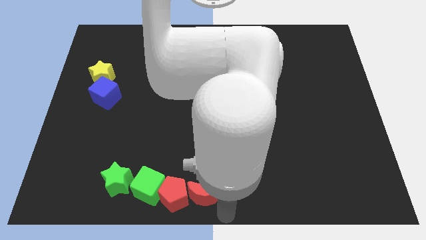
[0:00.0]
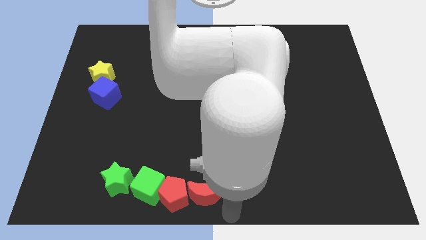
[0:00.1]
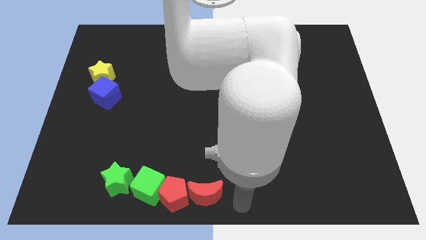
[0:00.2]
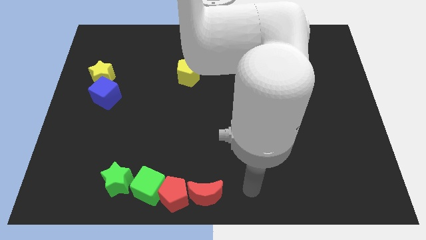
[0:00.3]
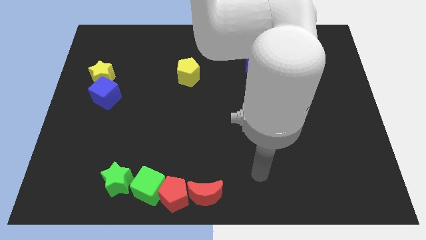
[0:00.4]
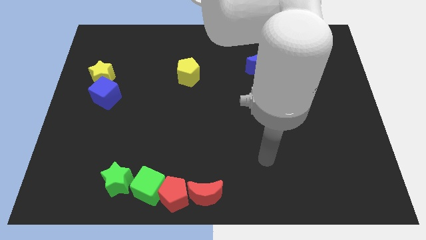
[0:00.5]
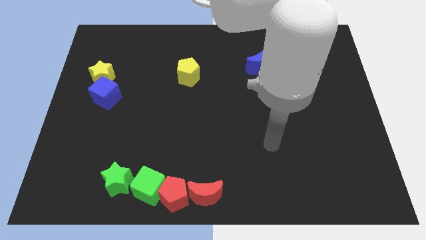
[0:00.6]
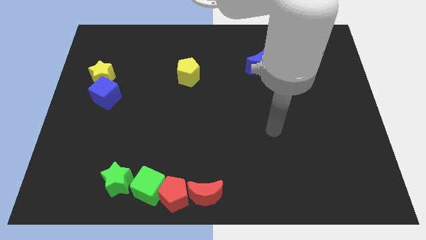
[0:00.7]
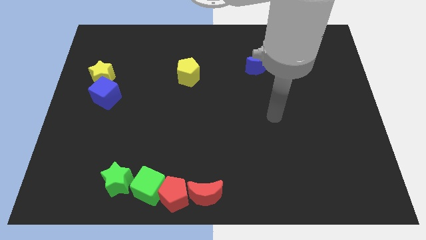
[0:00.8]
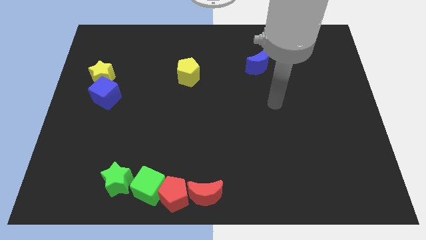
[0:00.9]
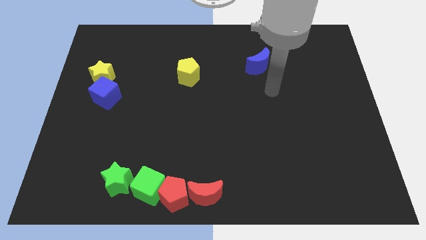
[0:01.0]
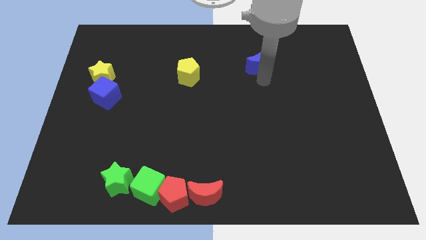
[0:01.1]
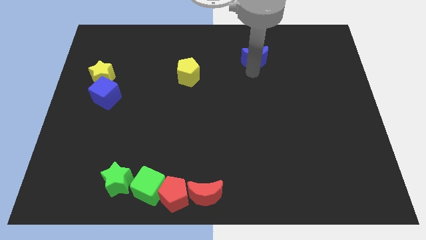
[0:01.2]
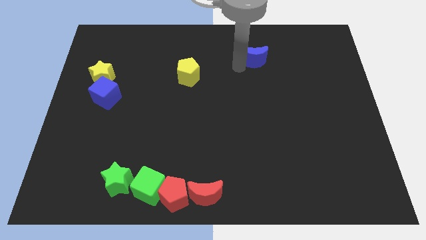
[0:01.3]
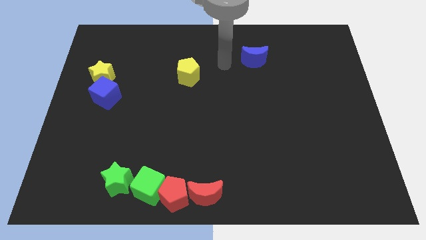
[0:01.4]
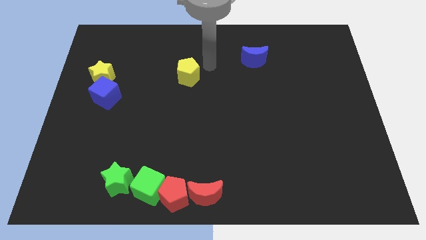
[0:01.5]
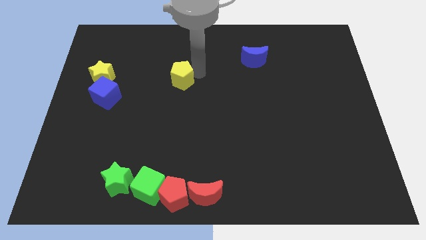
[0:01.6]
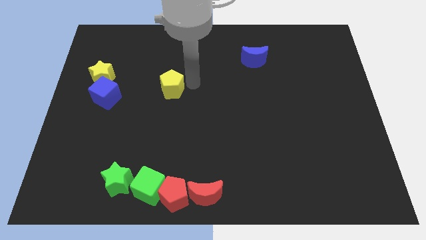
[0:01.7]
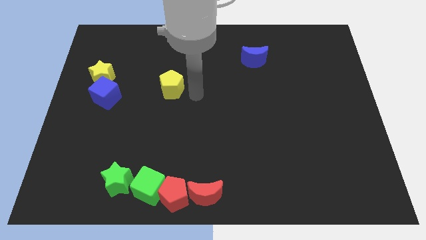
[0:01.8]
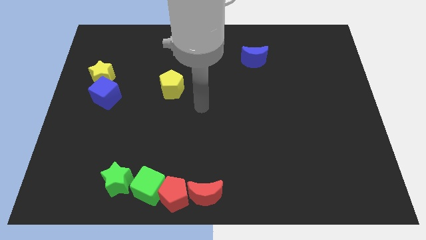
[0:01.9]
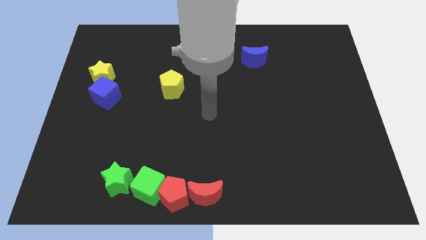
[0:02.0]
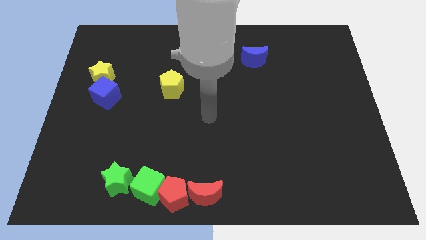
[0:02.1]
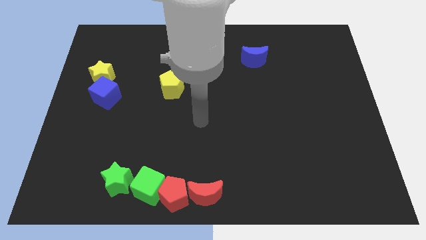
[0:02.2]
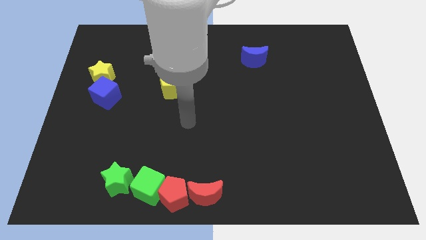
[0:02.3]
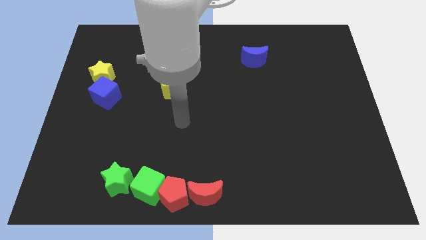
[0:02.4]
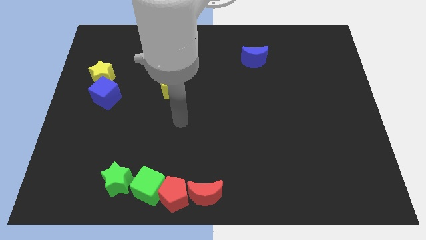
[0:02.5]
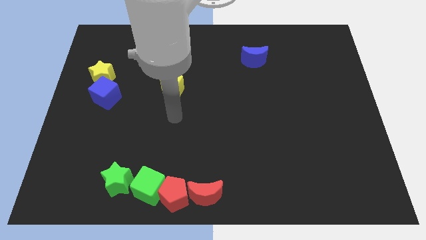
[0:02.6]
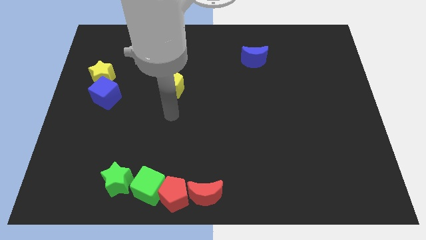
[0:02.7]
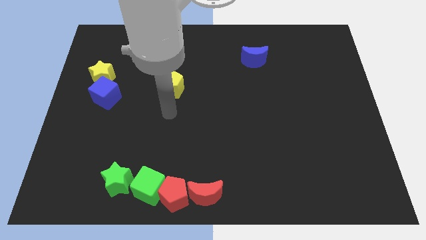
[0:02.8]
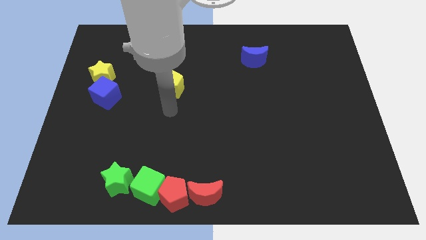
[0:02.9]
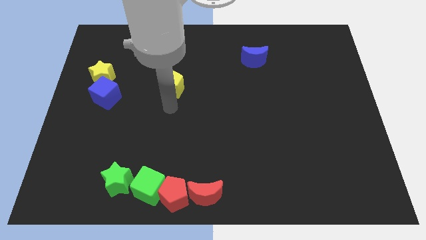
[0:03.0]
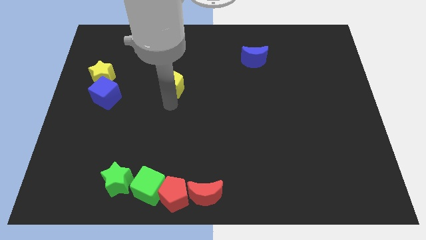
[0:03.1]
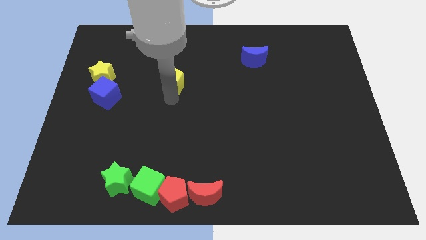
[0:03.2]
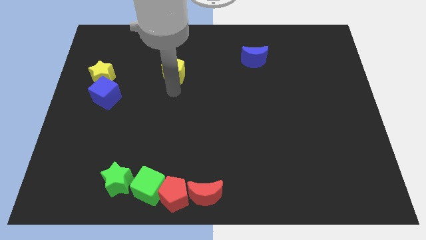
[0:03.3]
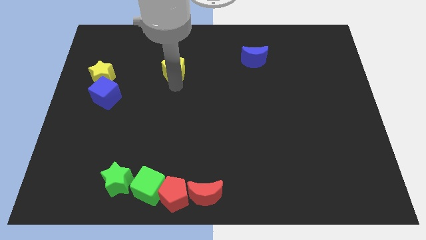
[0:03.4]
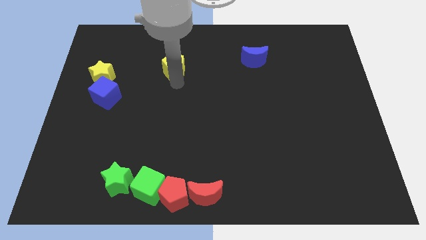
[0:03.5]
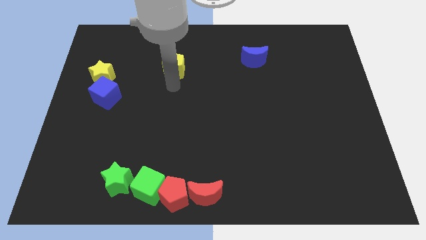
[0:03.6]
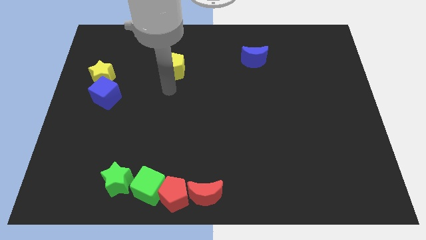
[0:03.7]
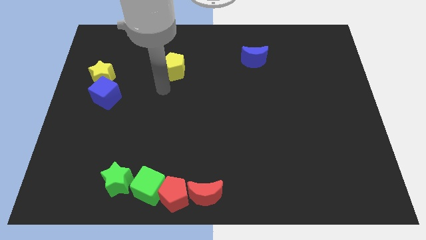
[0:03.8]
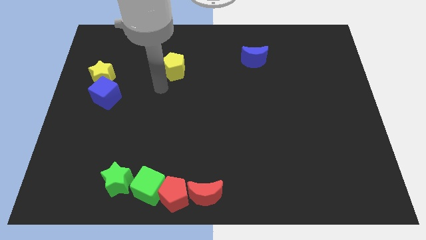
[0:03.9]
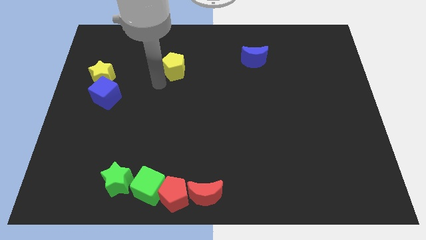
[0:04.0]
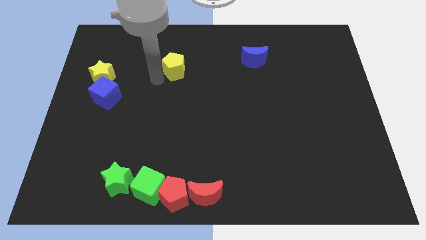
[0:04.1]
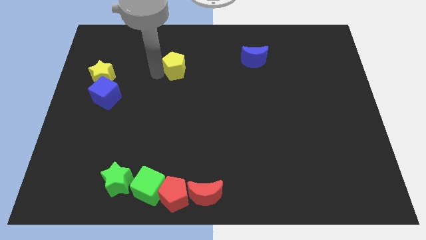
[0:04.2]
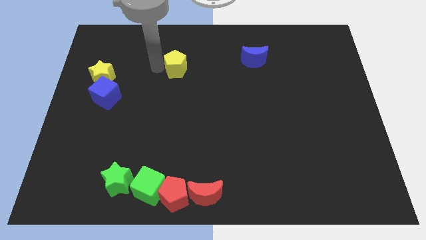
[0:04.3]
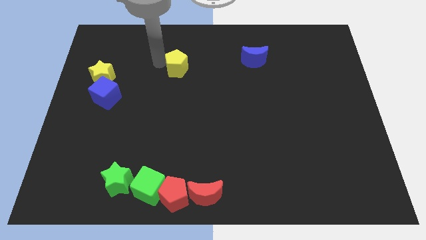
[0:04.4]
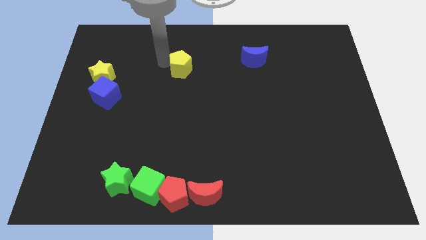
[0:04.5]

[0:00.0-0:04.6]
place blue crescent and the yellow pentagon in a horizontal line

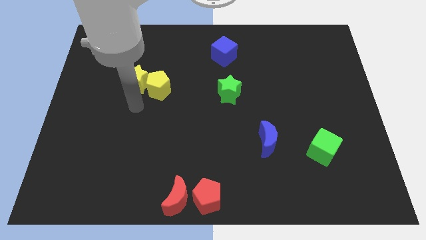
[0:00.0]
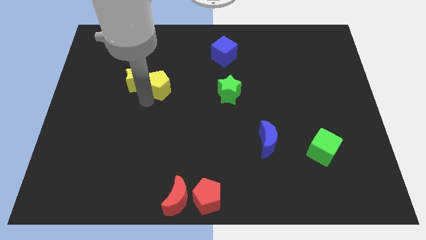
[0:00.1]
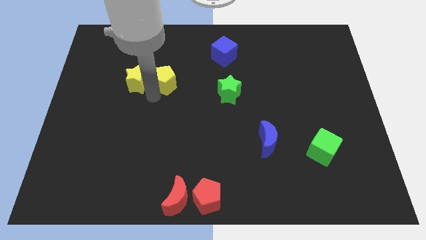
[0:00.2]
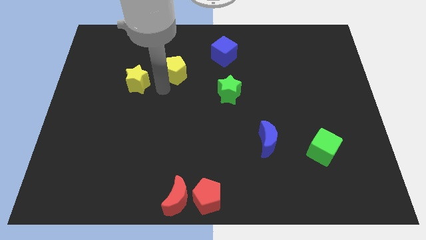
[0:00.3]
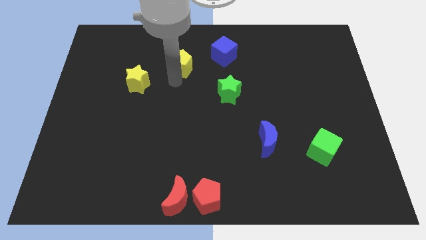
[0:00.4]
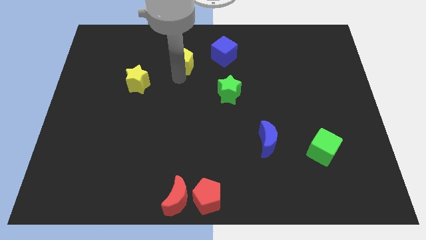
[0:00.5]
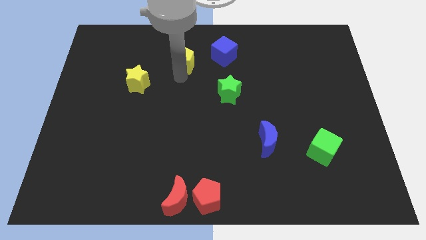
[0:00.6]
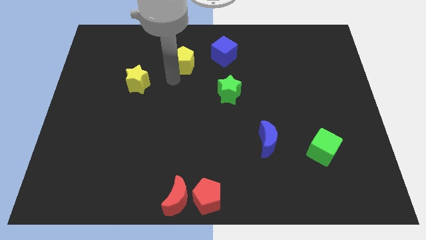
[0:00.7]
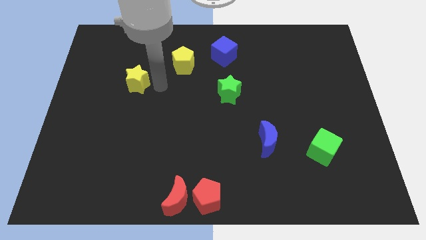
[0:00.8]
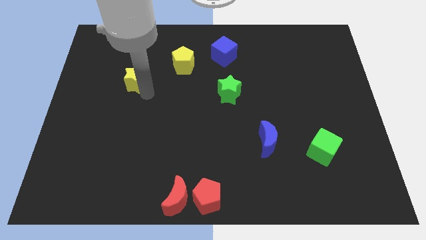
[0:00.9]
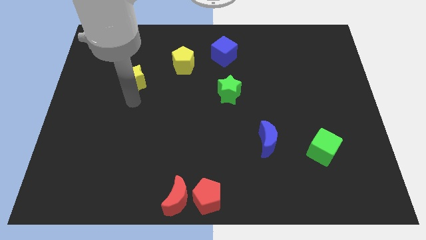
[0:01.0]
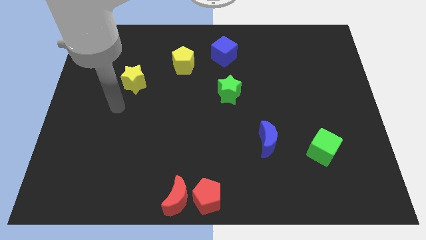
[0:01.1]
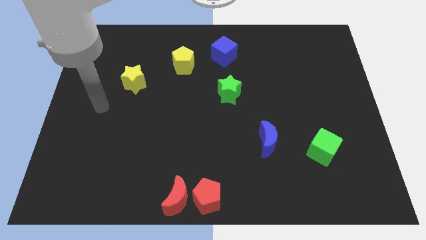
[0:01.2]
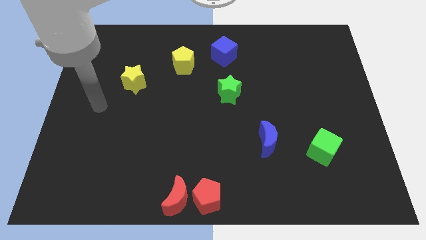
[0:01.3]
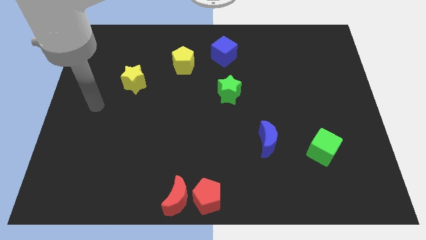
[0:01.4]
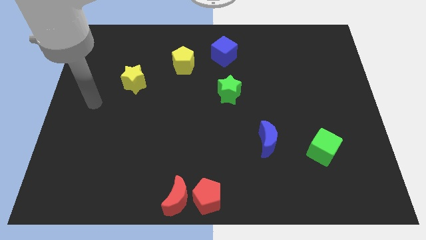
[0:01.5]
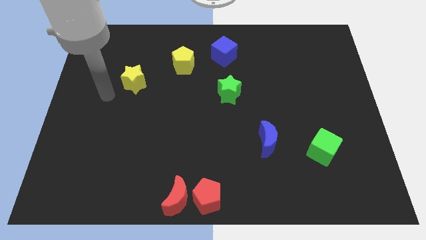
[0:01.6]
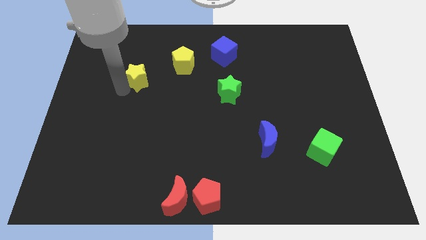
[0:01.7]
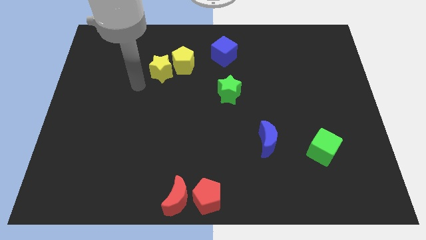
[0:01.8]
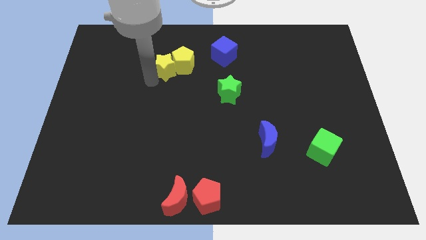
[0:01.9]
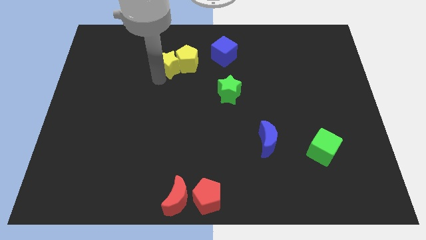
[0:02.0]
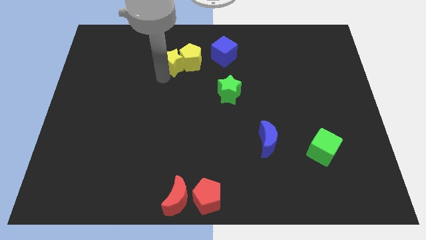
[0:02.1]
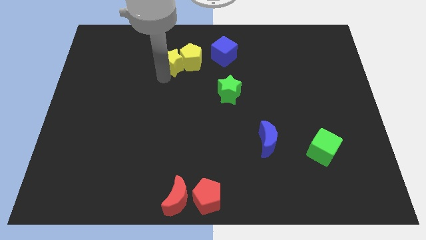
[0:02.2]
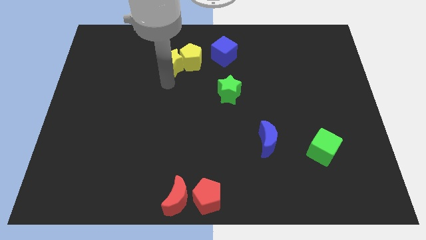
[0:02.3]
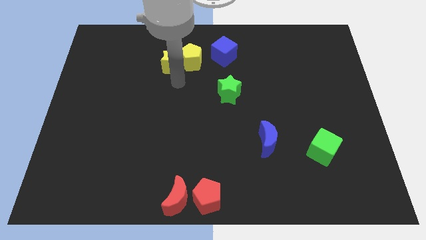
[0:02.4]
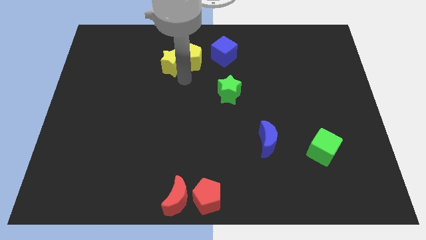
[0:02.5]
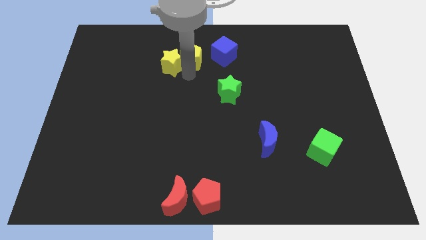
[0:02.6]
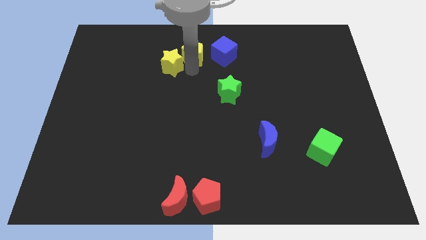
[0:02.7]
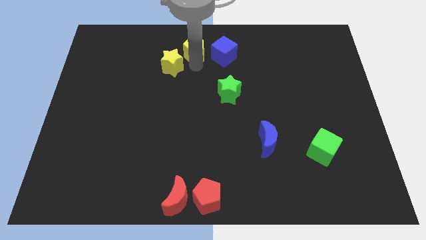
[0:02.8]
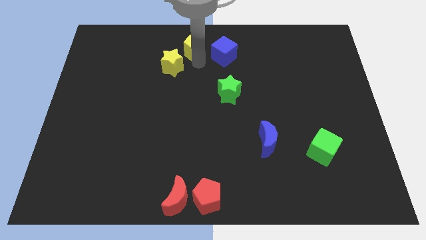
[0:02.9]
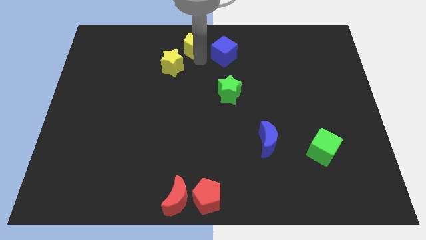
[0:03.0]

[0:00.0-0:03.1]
place the yellow pentagon in between the yellow star and the blue cube

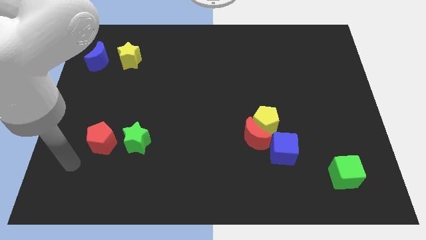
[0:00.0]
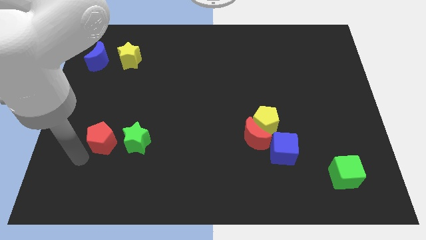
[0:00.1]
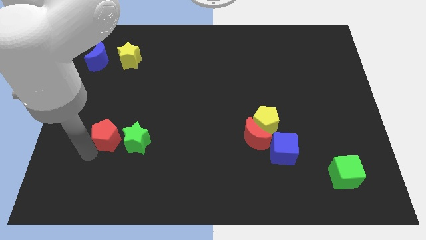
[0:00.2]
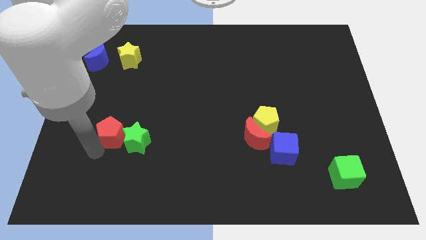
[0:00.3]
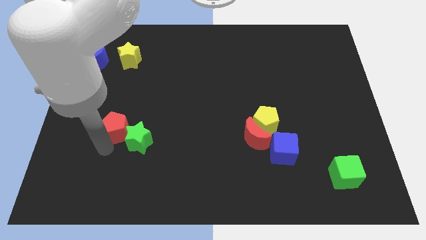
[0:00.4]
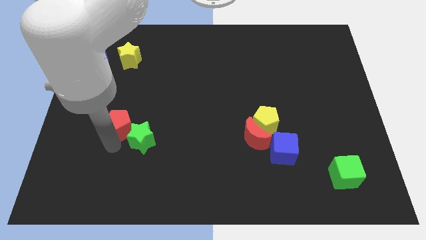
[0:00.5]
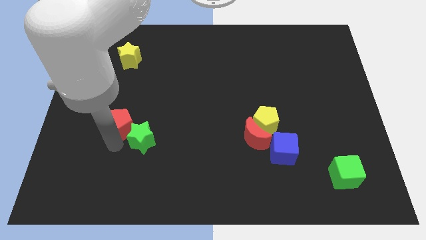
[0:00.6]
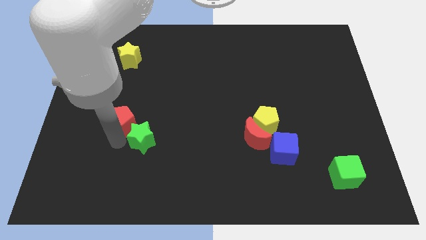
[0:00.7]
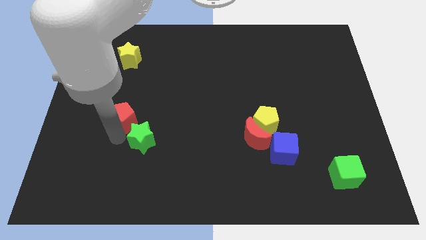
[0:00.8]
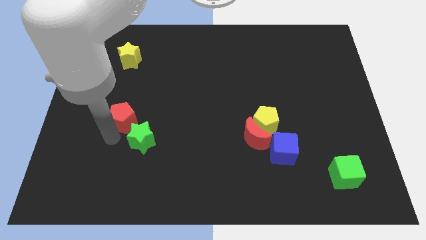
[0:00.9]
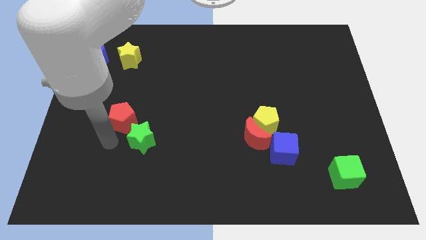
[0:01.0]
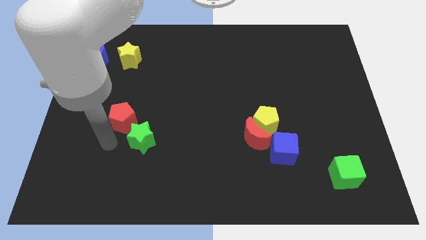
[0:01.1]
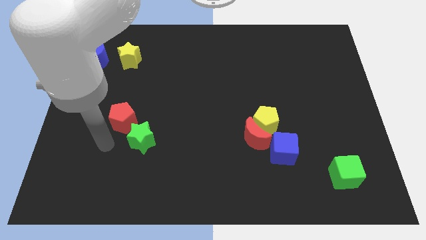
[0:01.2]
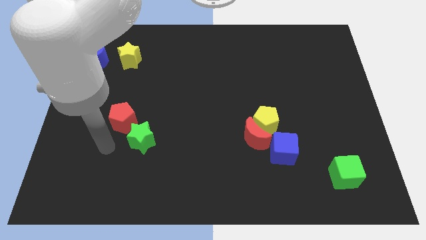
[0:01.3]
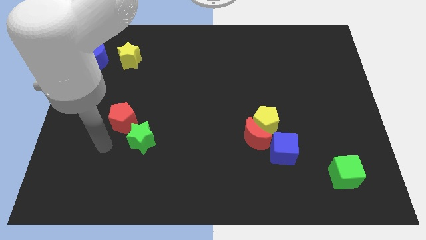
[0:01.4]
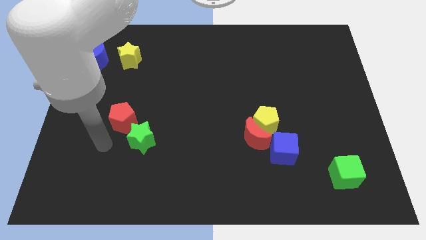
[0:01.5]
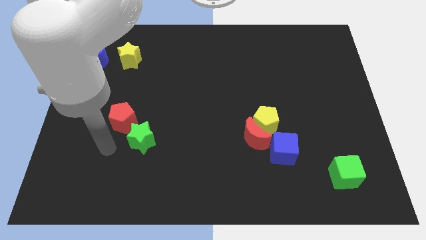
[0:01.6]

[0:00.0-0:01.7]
push the red pentagon into the green star
